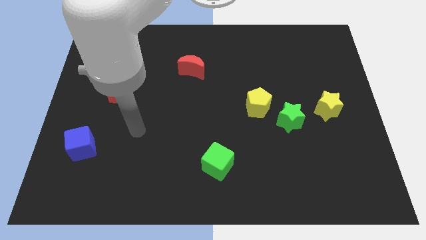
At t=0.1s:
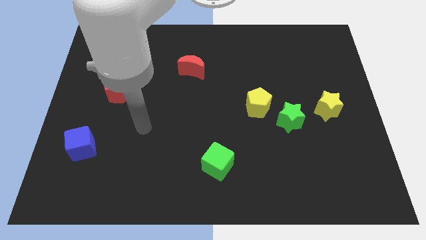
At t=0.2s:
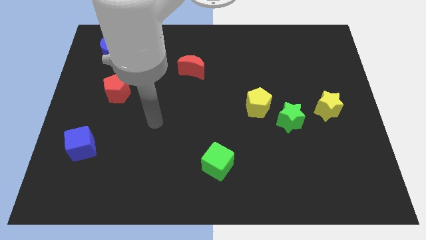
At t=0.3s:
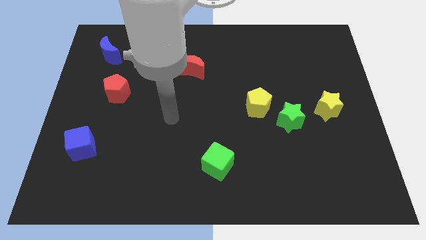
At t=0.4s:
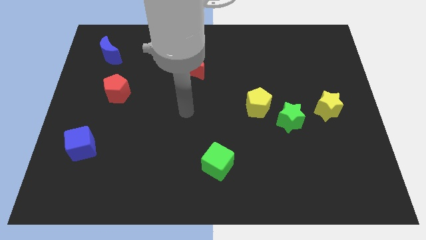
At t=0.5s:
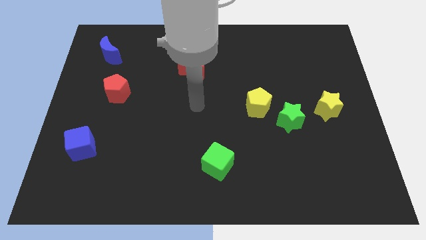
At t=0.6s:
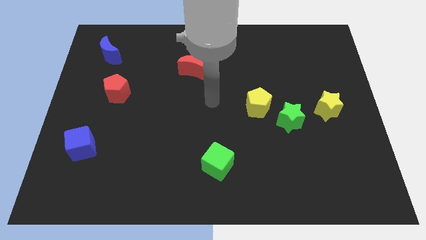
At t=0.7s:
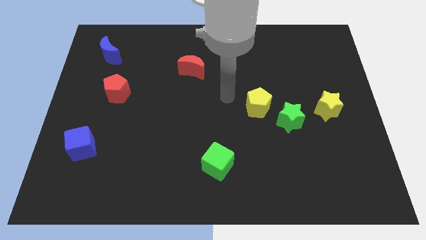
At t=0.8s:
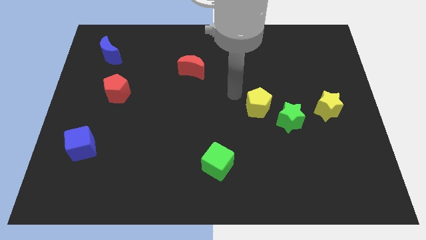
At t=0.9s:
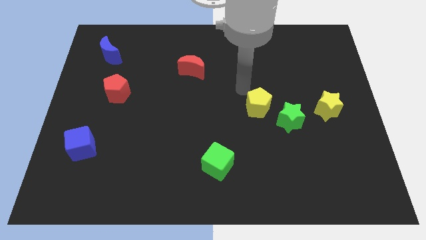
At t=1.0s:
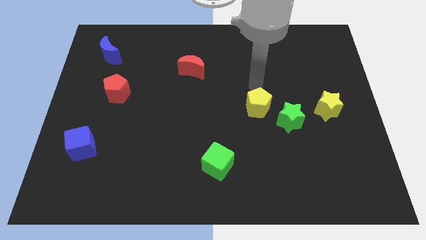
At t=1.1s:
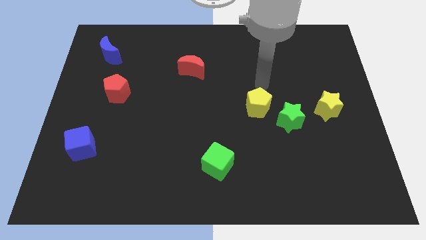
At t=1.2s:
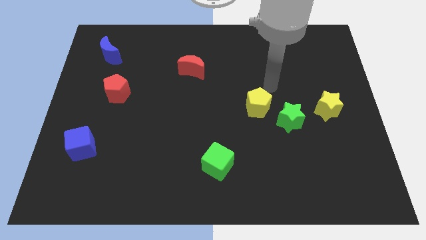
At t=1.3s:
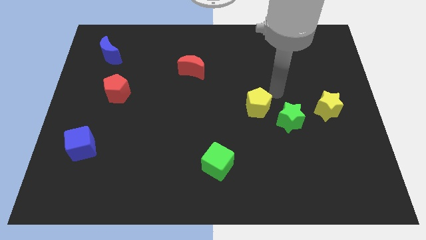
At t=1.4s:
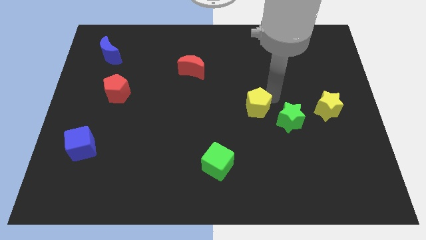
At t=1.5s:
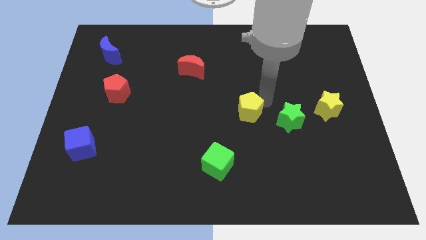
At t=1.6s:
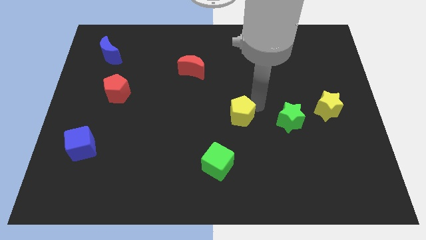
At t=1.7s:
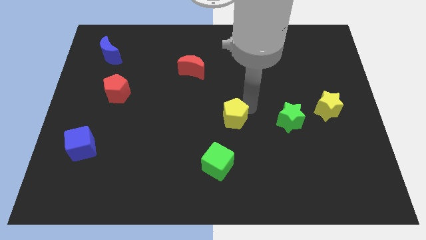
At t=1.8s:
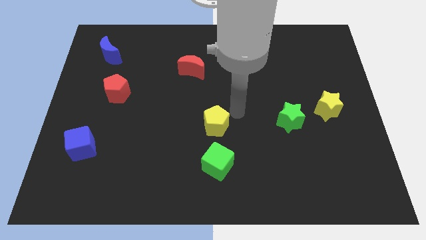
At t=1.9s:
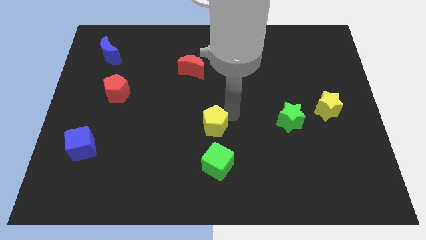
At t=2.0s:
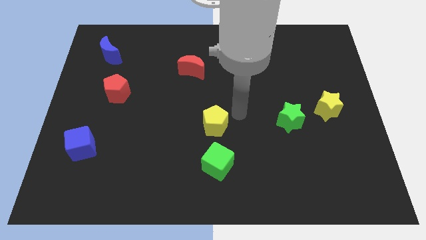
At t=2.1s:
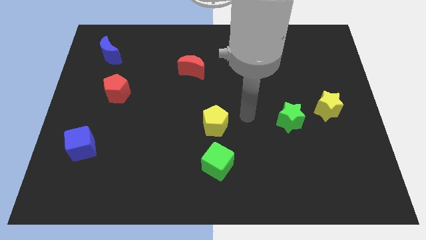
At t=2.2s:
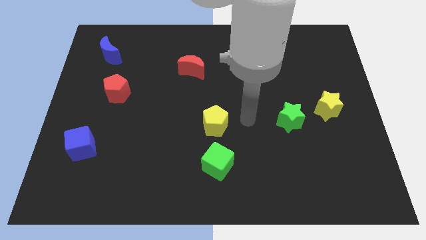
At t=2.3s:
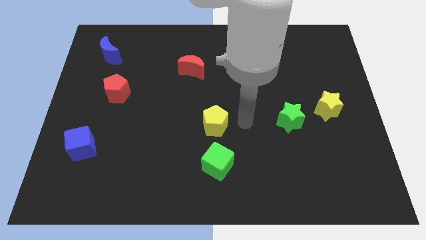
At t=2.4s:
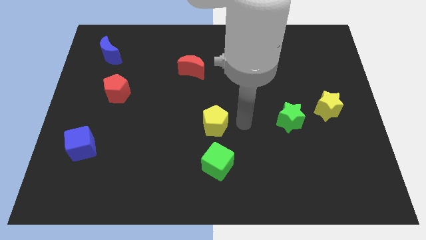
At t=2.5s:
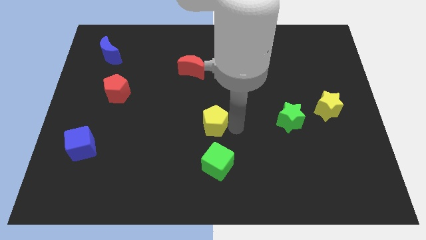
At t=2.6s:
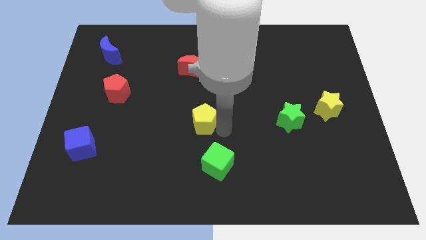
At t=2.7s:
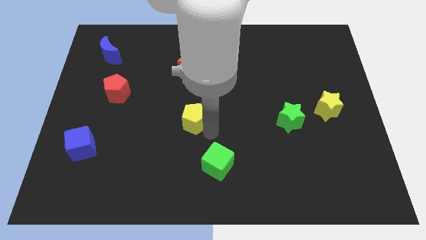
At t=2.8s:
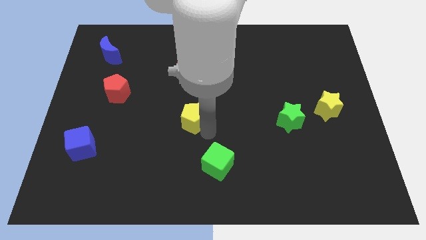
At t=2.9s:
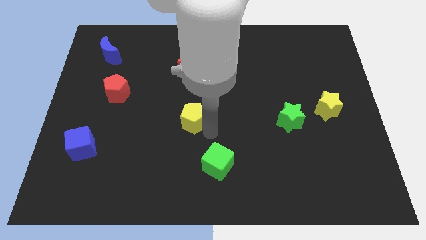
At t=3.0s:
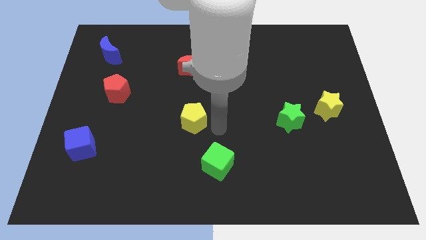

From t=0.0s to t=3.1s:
place yellow pentagon vertical to red moon

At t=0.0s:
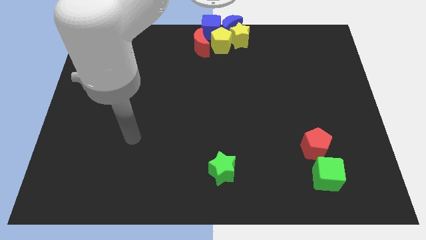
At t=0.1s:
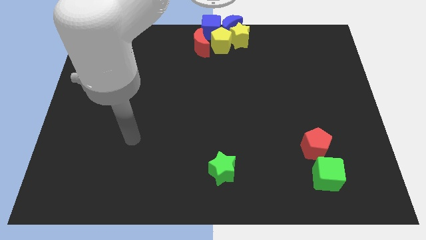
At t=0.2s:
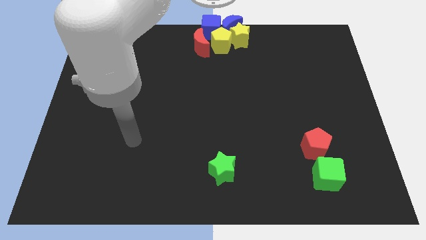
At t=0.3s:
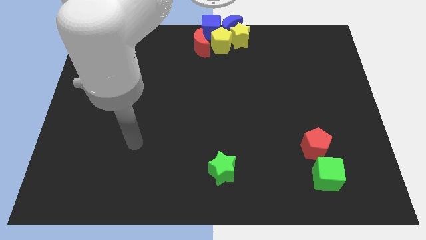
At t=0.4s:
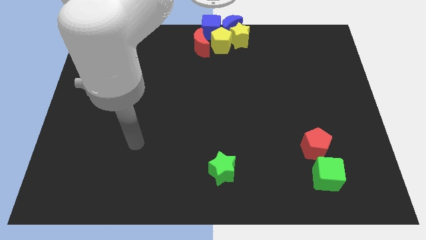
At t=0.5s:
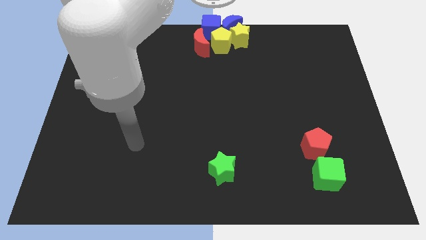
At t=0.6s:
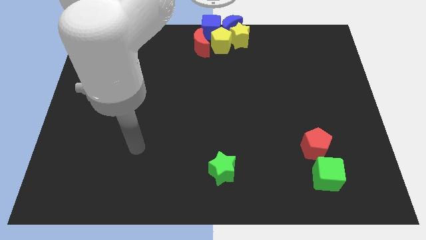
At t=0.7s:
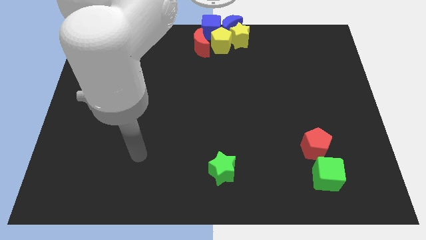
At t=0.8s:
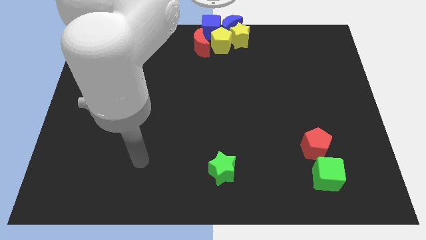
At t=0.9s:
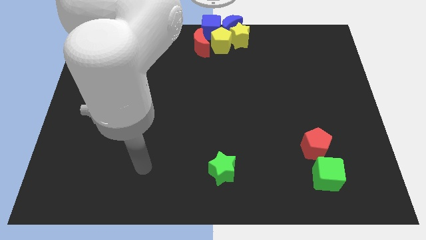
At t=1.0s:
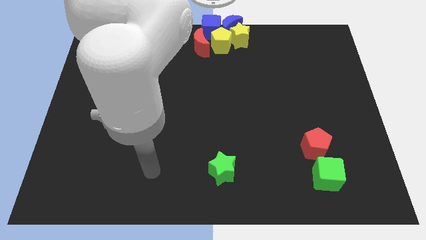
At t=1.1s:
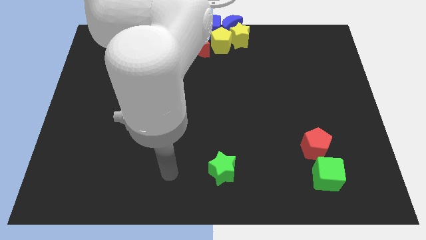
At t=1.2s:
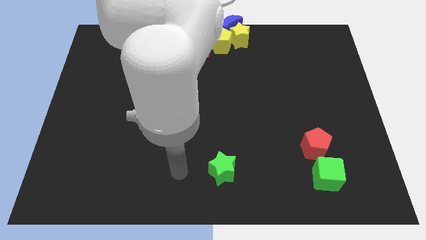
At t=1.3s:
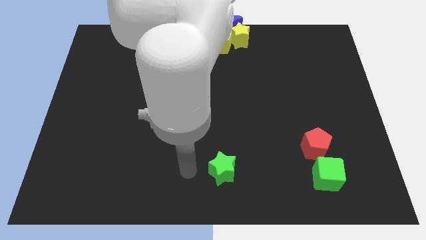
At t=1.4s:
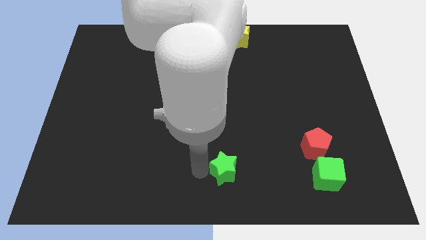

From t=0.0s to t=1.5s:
move the arm to the left of the green star

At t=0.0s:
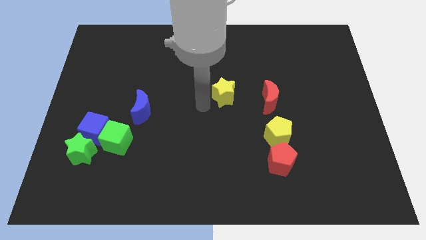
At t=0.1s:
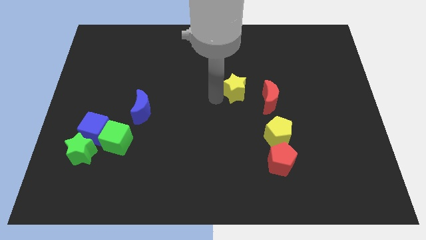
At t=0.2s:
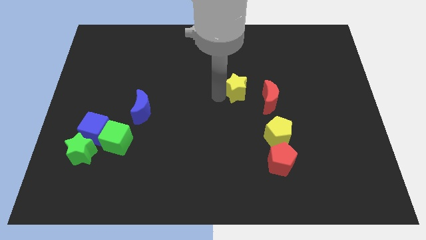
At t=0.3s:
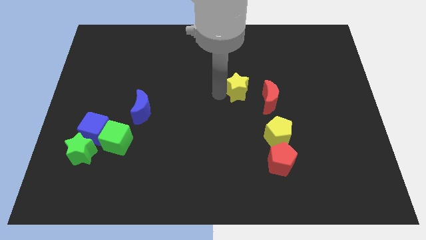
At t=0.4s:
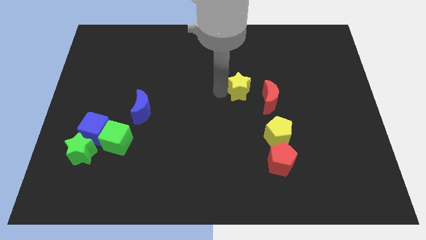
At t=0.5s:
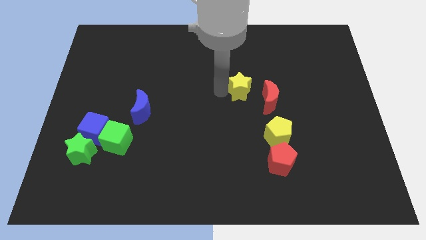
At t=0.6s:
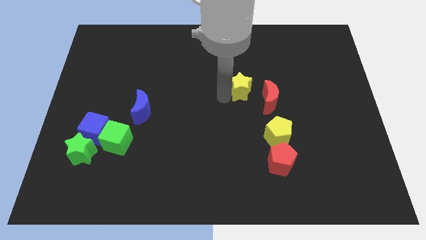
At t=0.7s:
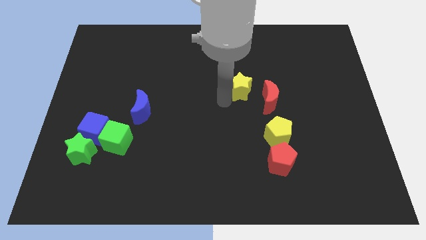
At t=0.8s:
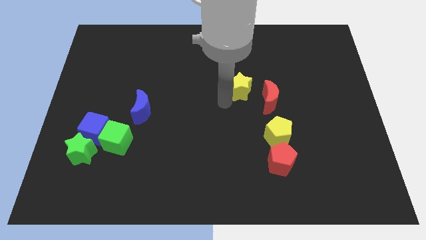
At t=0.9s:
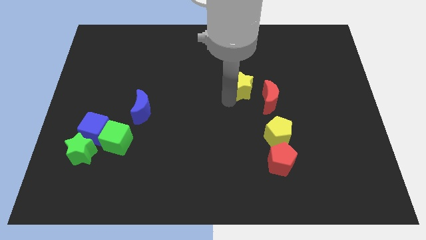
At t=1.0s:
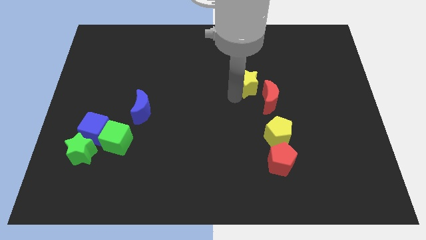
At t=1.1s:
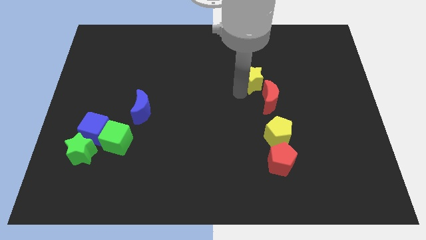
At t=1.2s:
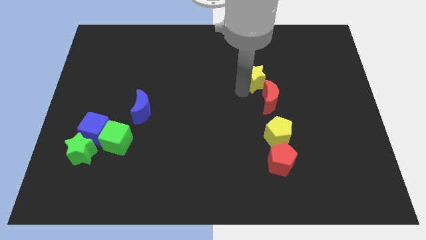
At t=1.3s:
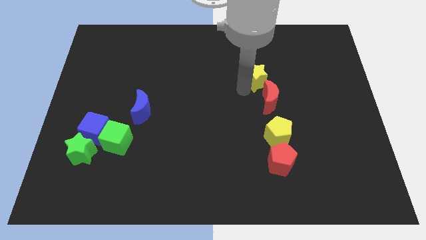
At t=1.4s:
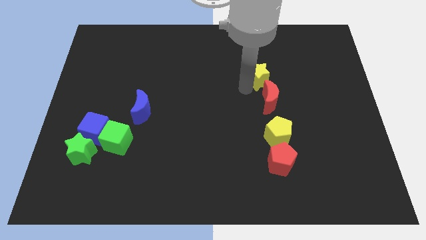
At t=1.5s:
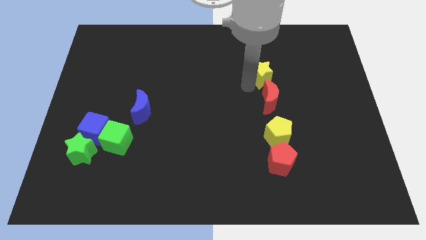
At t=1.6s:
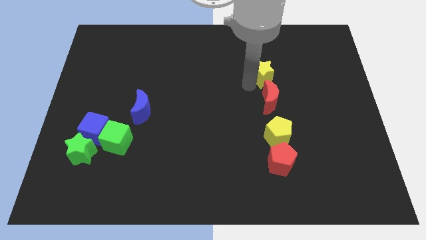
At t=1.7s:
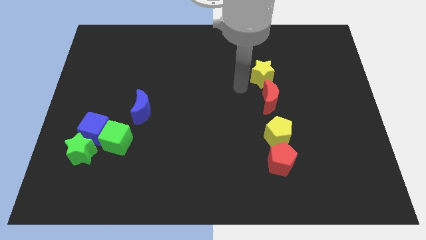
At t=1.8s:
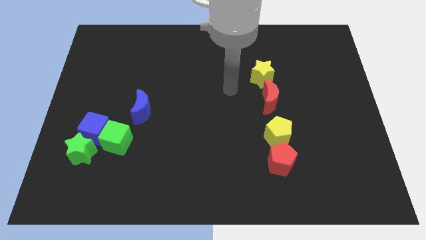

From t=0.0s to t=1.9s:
place the yellow star on top of the red crescent

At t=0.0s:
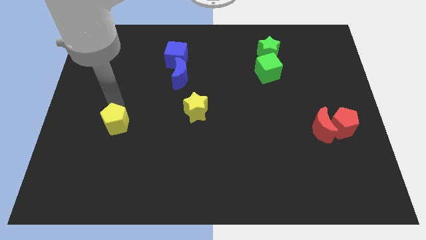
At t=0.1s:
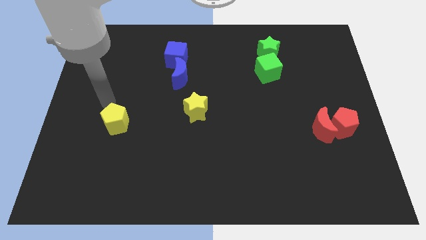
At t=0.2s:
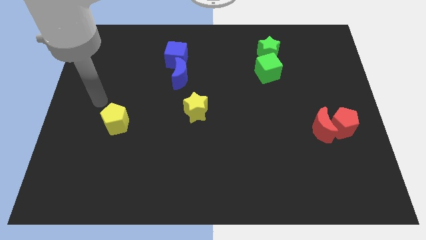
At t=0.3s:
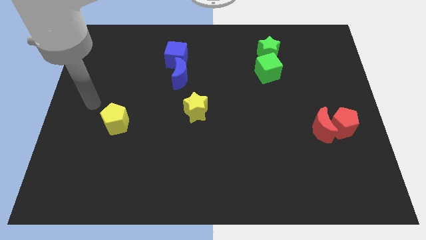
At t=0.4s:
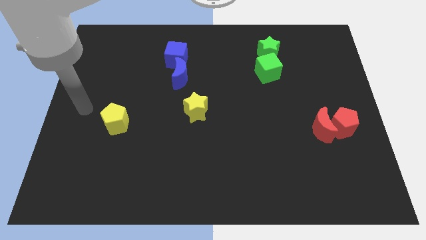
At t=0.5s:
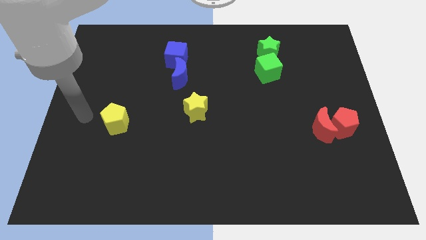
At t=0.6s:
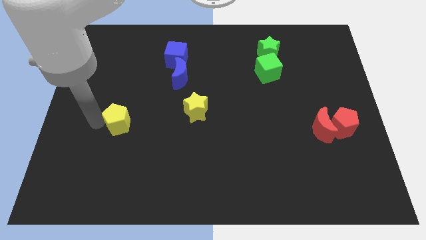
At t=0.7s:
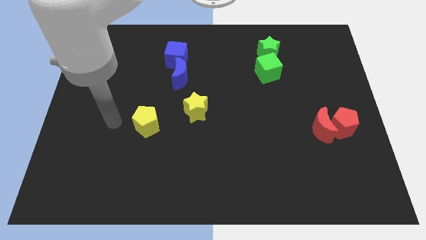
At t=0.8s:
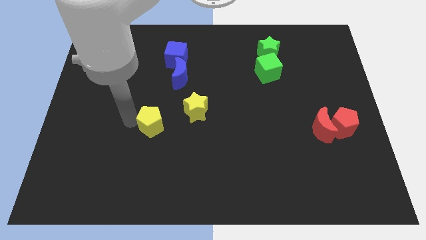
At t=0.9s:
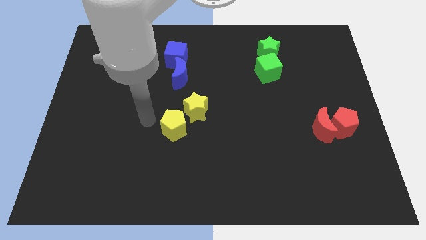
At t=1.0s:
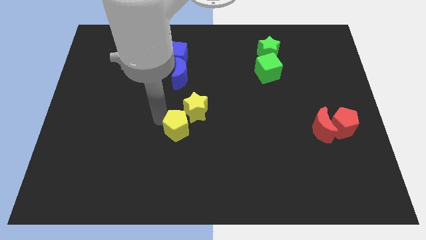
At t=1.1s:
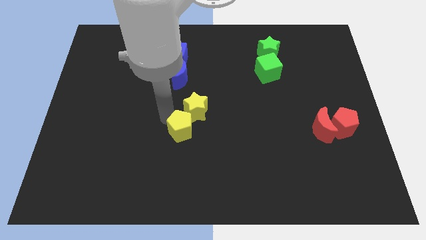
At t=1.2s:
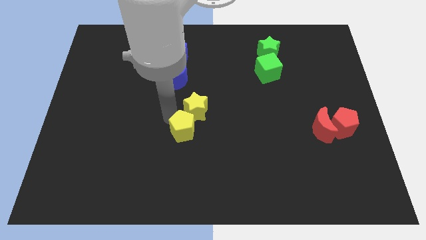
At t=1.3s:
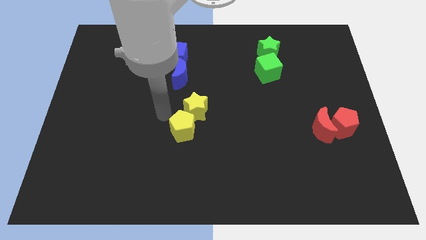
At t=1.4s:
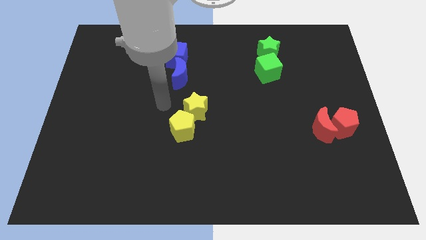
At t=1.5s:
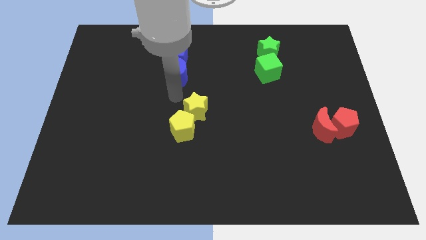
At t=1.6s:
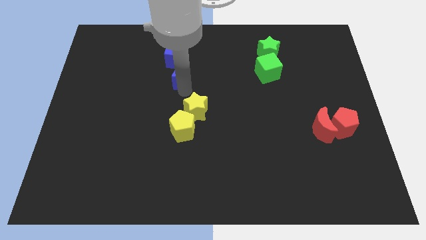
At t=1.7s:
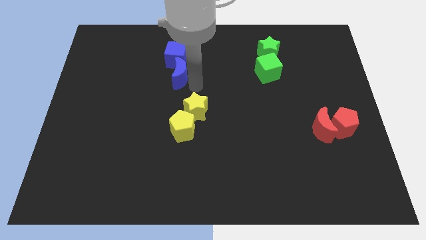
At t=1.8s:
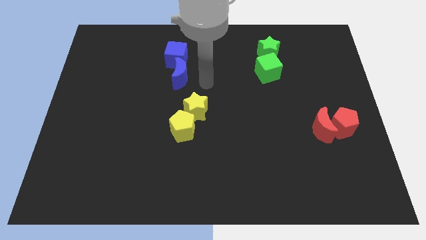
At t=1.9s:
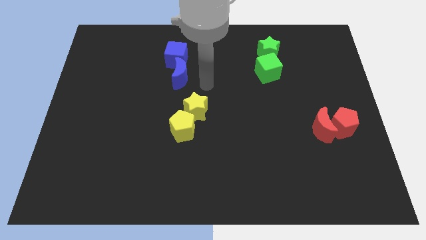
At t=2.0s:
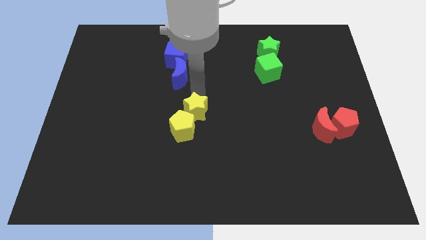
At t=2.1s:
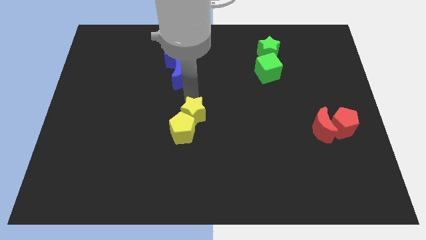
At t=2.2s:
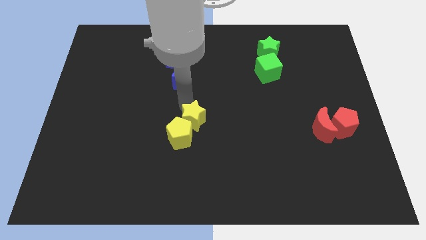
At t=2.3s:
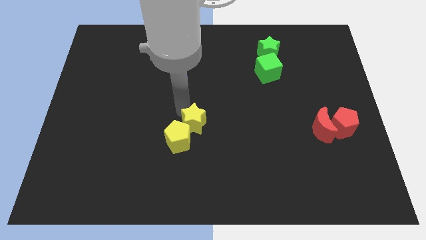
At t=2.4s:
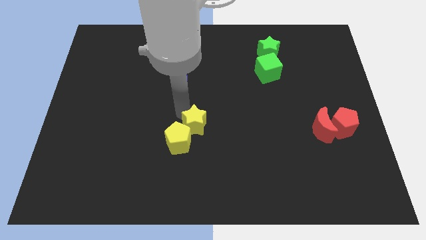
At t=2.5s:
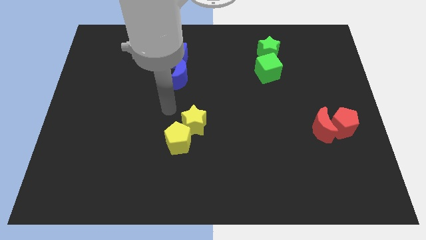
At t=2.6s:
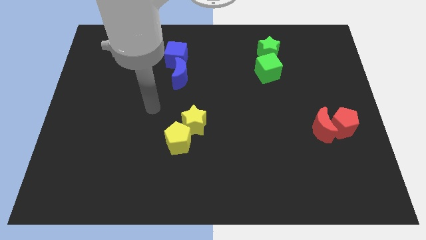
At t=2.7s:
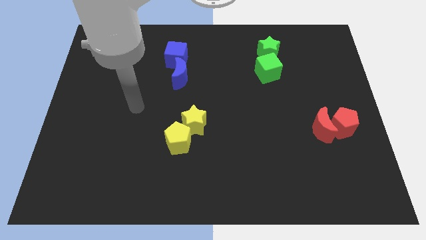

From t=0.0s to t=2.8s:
push the yellow star into the yellow pentagon
